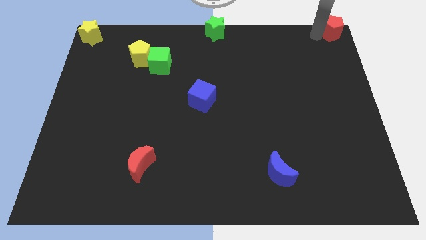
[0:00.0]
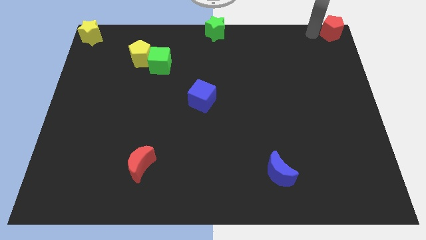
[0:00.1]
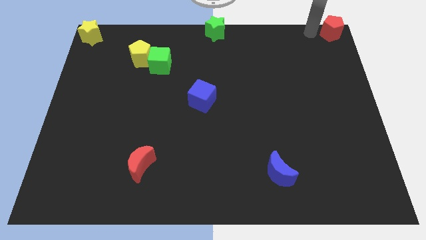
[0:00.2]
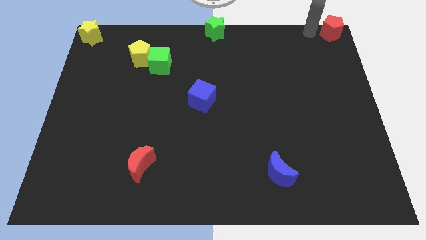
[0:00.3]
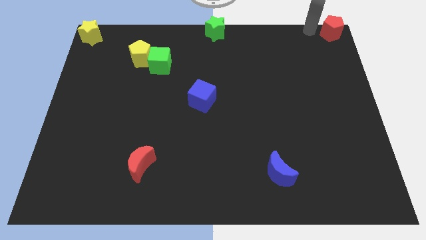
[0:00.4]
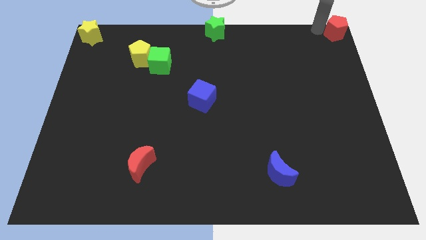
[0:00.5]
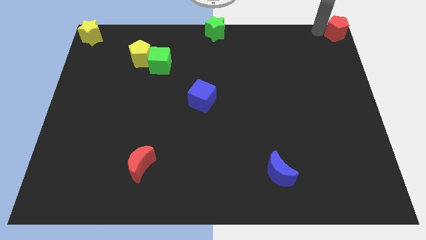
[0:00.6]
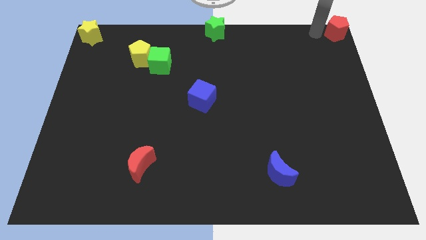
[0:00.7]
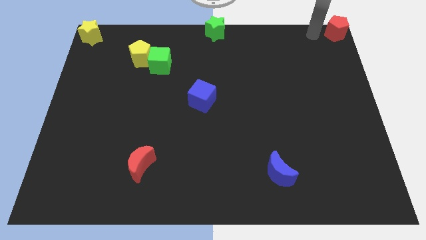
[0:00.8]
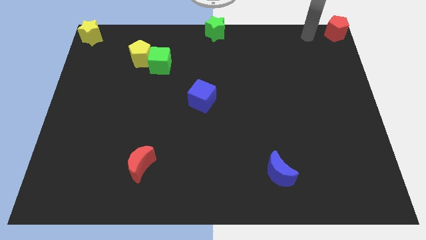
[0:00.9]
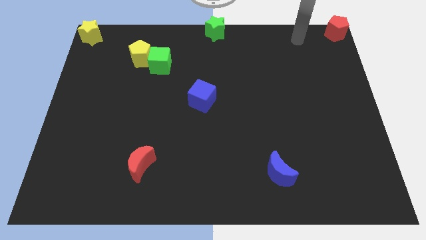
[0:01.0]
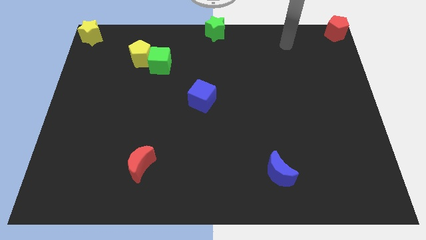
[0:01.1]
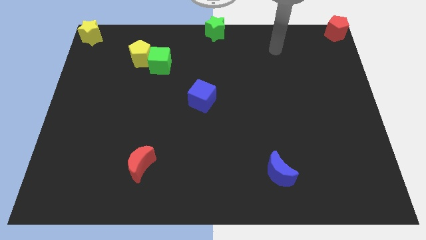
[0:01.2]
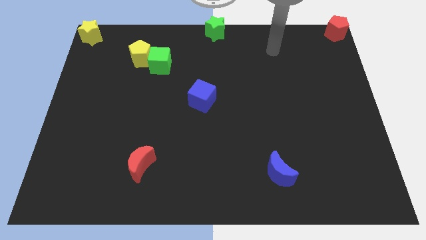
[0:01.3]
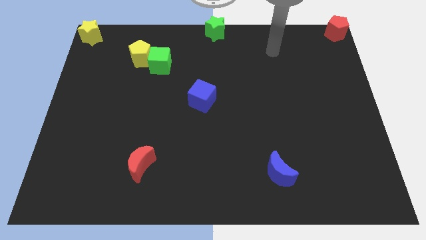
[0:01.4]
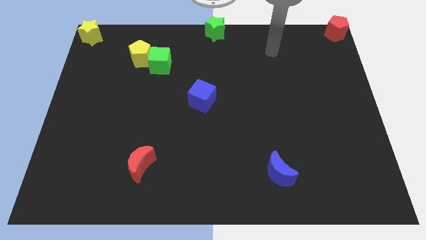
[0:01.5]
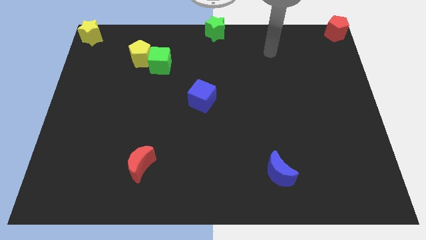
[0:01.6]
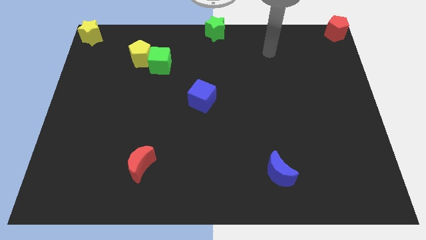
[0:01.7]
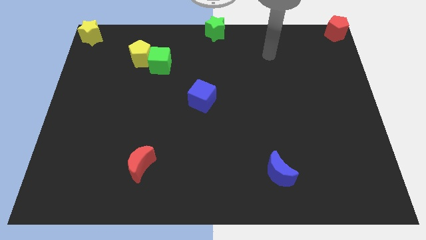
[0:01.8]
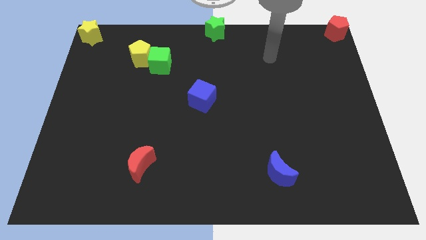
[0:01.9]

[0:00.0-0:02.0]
move the arm away from the red pentagon

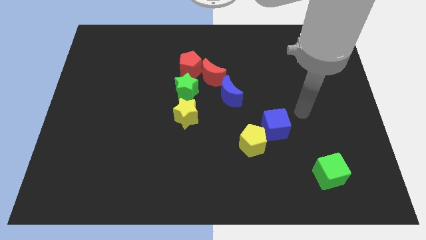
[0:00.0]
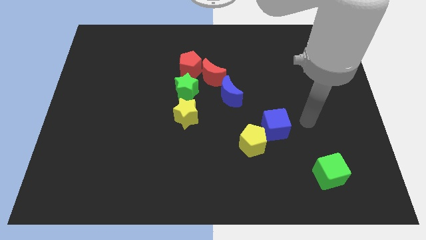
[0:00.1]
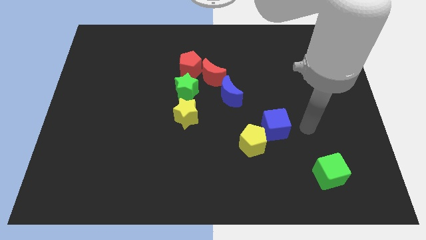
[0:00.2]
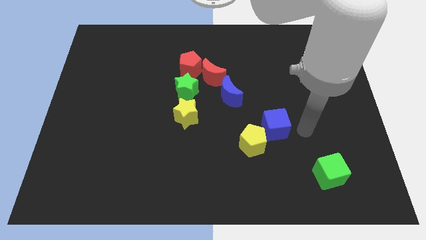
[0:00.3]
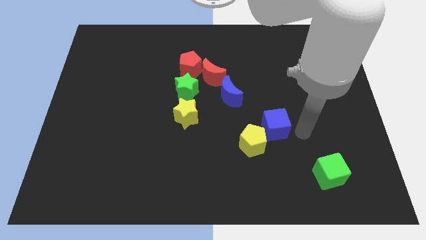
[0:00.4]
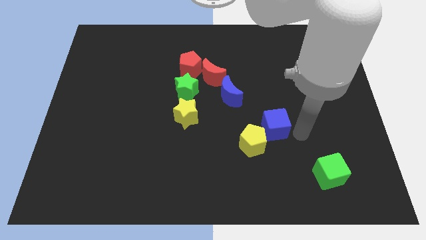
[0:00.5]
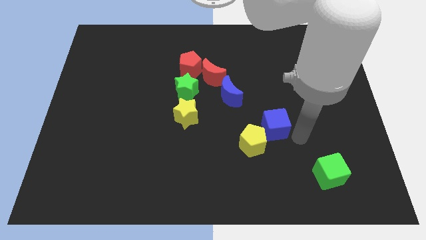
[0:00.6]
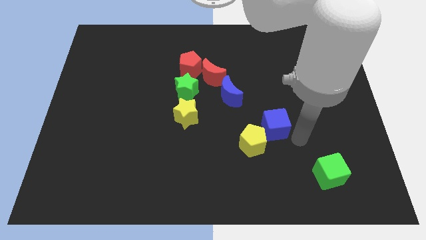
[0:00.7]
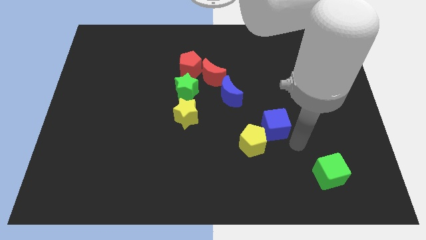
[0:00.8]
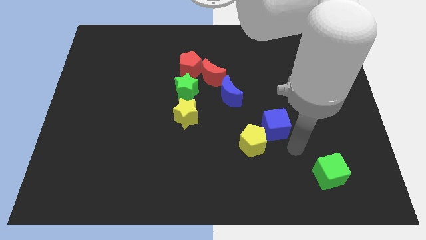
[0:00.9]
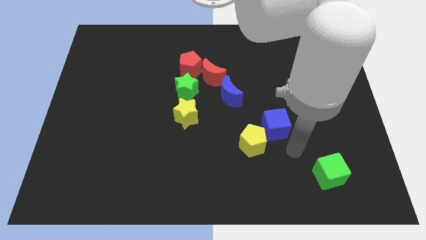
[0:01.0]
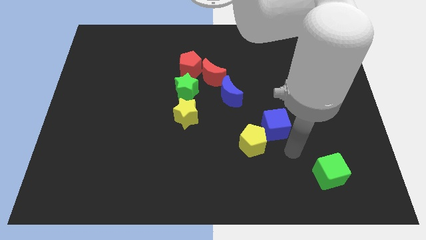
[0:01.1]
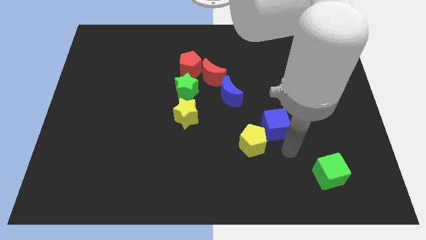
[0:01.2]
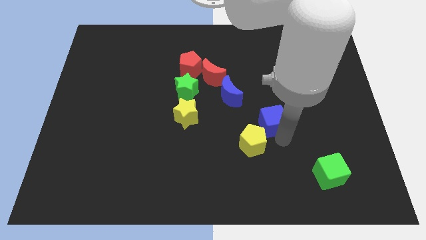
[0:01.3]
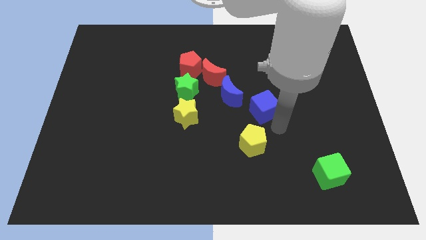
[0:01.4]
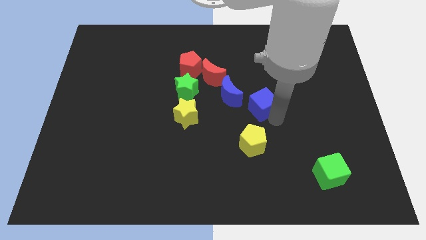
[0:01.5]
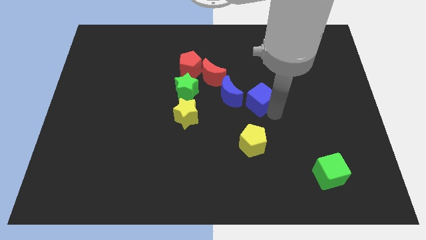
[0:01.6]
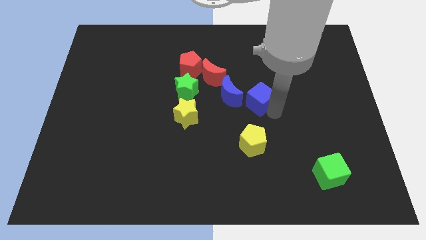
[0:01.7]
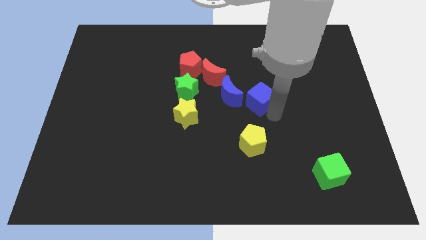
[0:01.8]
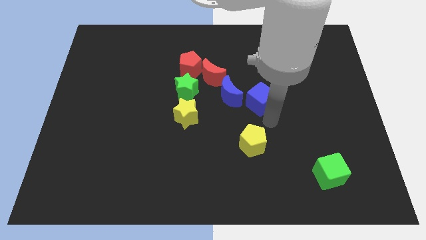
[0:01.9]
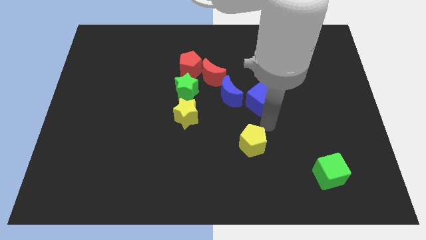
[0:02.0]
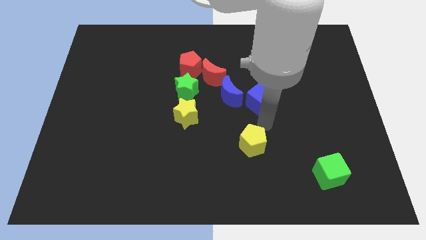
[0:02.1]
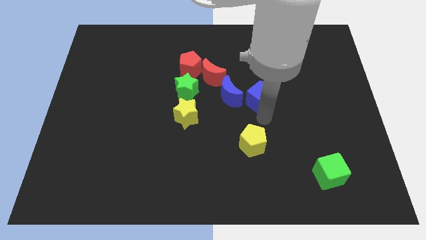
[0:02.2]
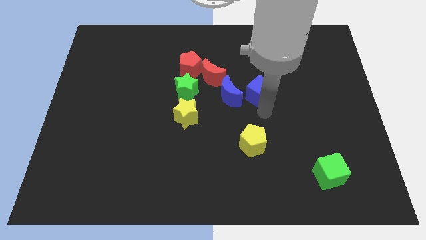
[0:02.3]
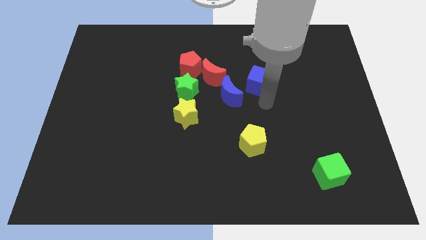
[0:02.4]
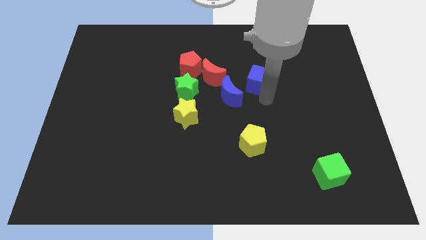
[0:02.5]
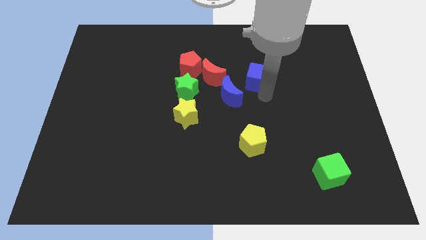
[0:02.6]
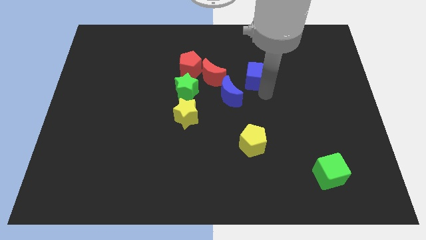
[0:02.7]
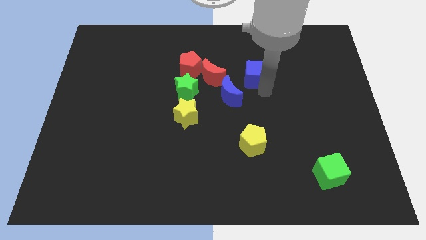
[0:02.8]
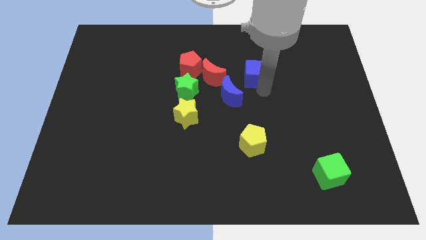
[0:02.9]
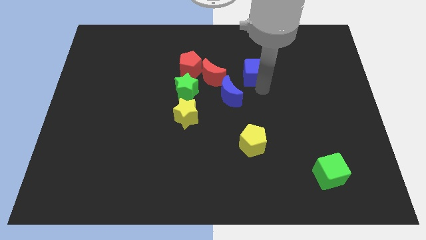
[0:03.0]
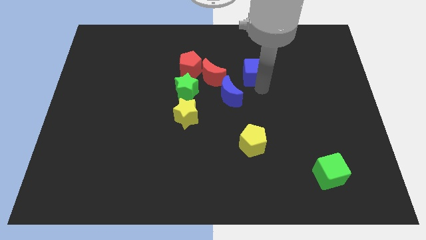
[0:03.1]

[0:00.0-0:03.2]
place the blue cube to the right of the red crescent

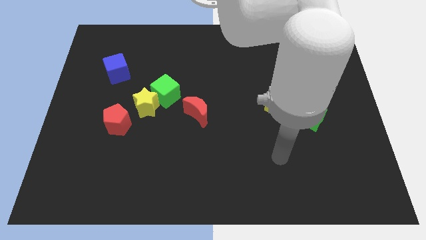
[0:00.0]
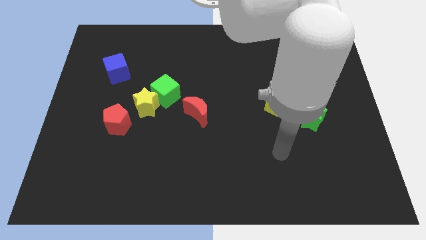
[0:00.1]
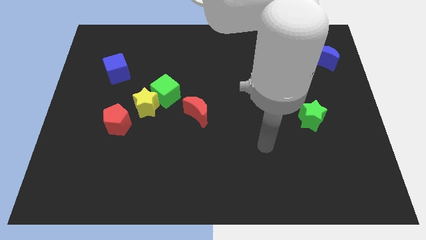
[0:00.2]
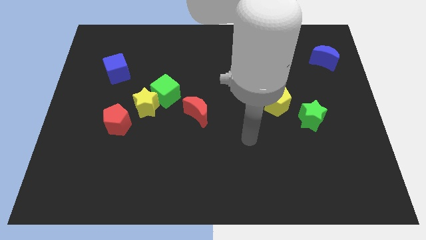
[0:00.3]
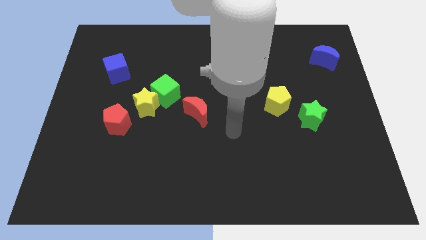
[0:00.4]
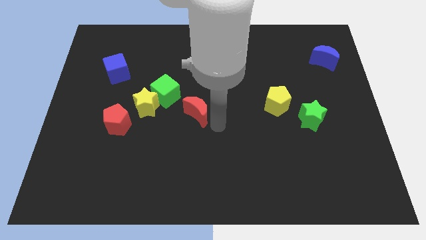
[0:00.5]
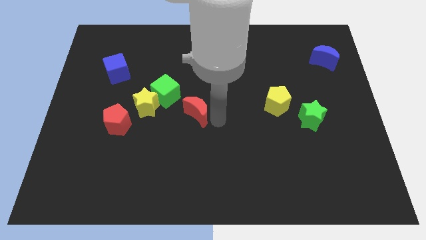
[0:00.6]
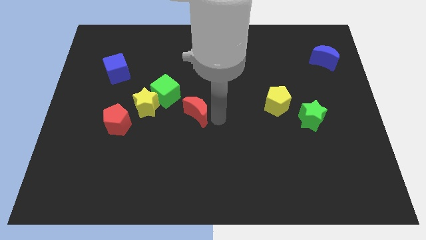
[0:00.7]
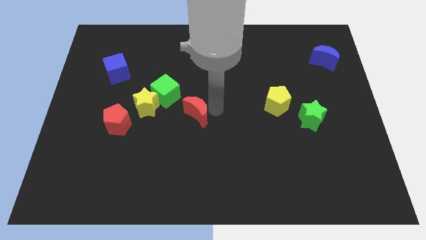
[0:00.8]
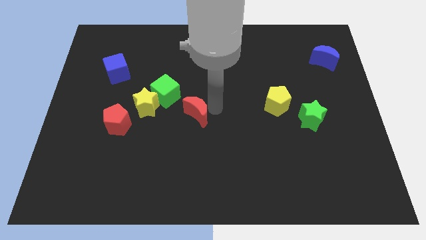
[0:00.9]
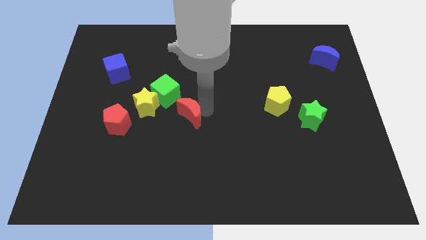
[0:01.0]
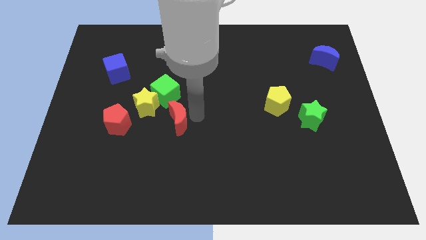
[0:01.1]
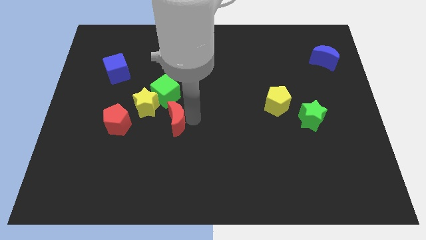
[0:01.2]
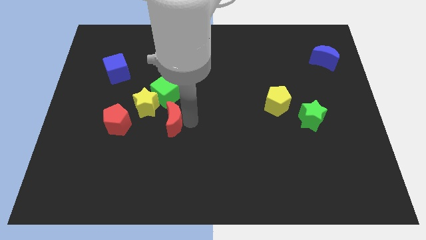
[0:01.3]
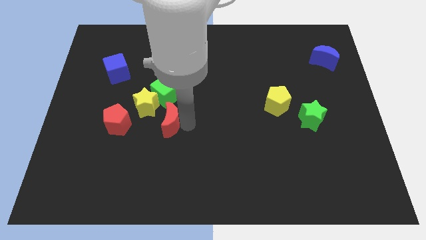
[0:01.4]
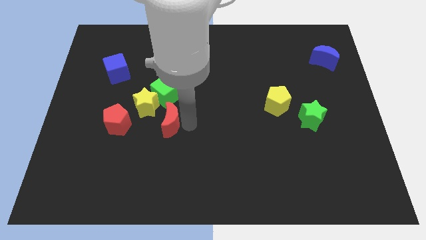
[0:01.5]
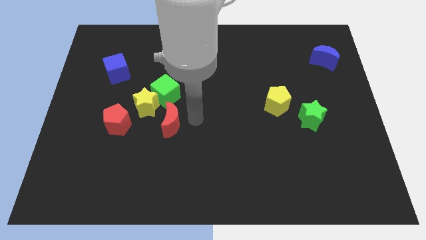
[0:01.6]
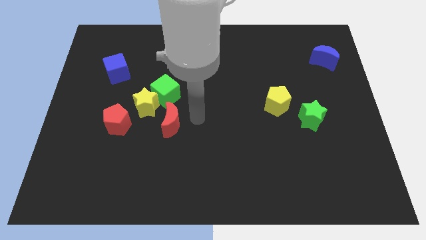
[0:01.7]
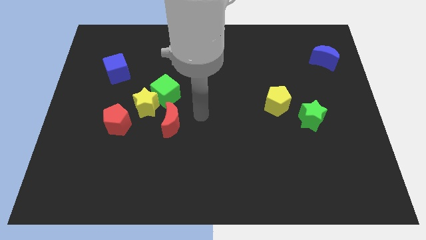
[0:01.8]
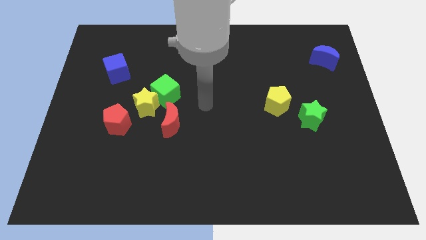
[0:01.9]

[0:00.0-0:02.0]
place the red crescent below the green cube

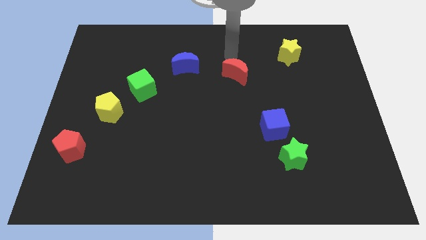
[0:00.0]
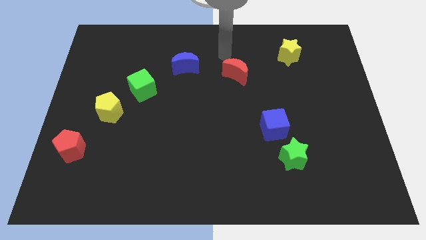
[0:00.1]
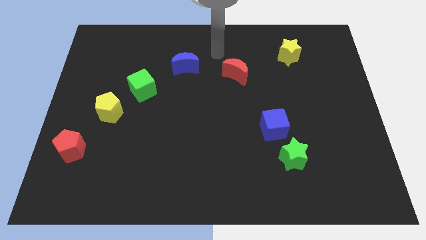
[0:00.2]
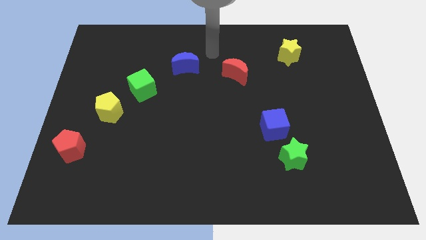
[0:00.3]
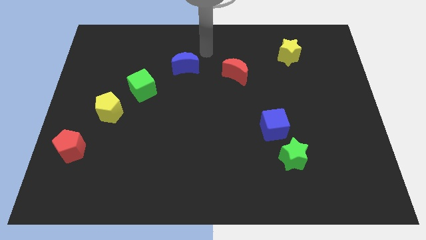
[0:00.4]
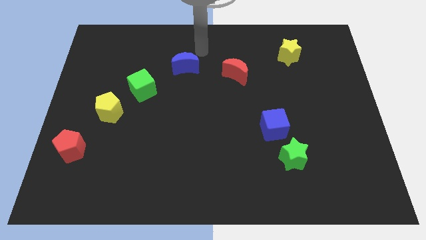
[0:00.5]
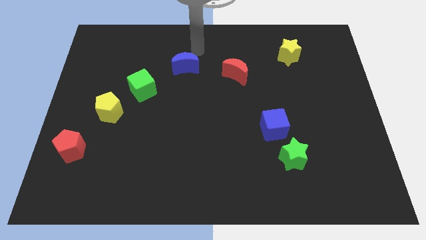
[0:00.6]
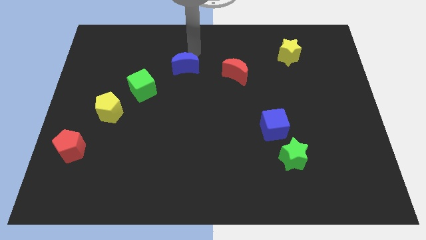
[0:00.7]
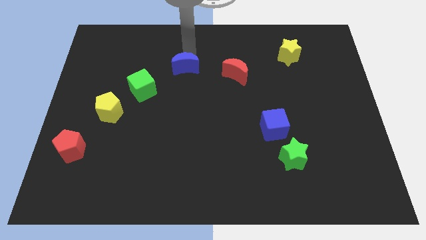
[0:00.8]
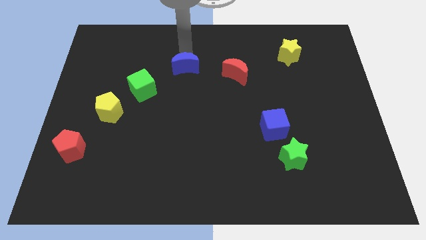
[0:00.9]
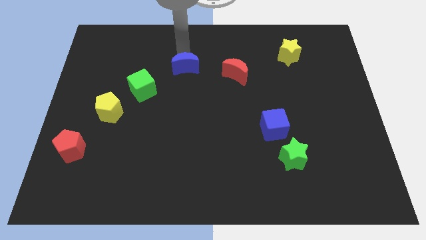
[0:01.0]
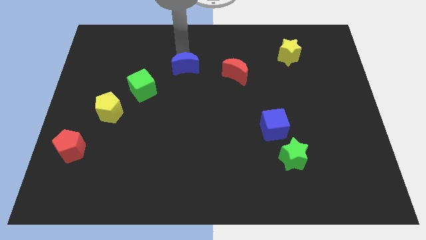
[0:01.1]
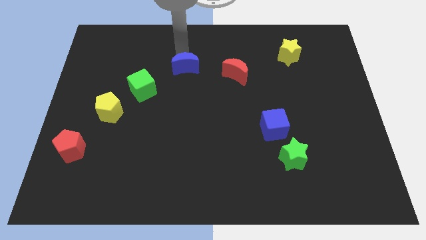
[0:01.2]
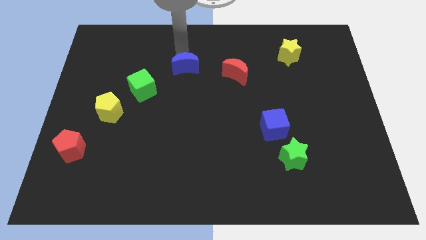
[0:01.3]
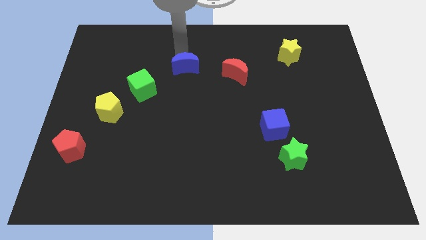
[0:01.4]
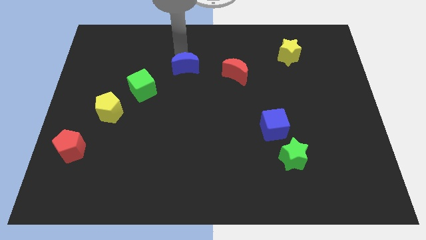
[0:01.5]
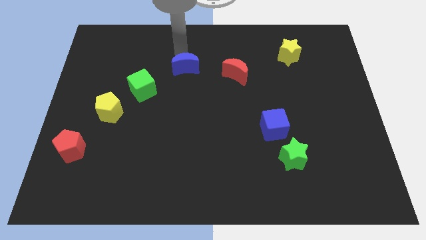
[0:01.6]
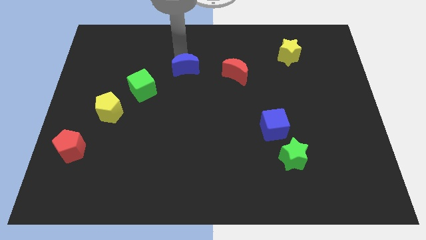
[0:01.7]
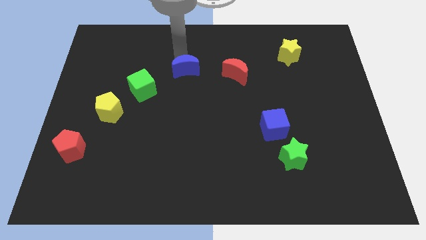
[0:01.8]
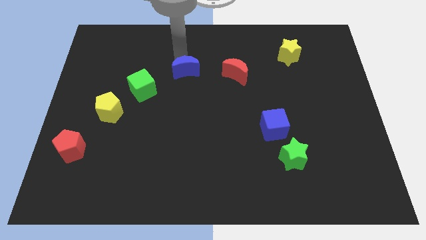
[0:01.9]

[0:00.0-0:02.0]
touch the blue moon
